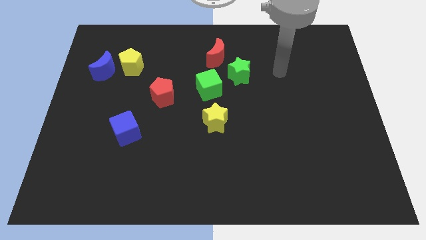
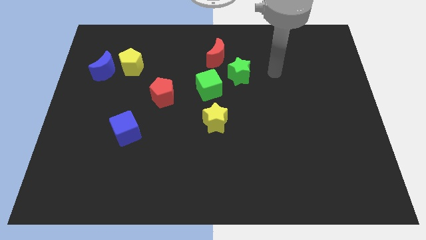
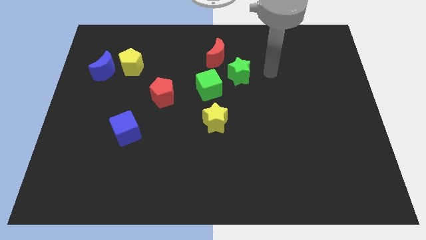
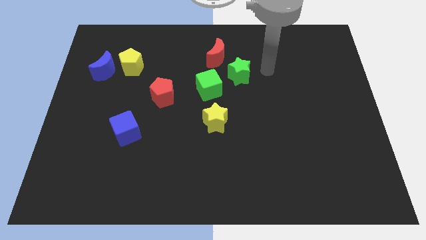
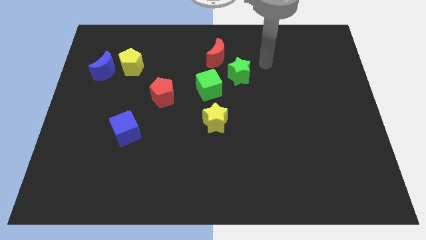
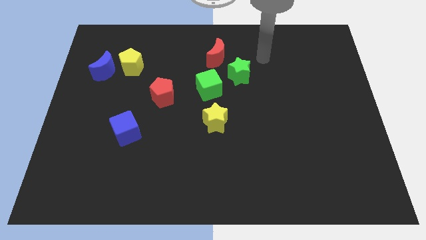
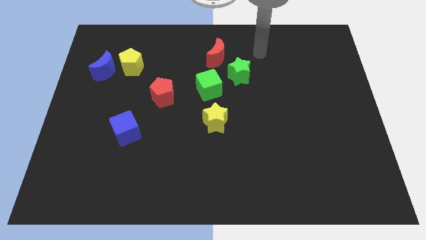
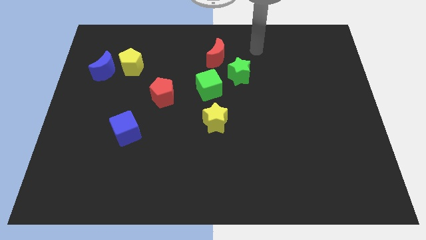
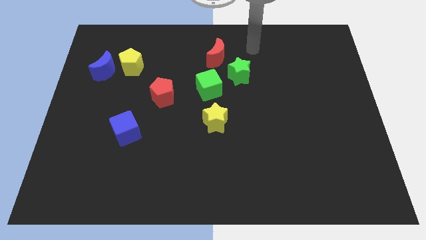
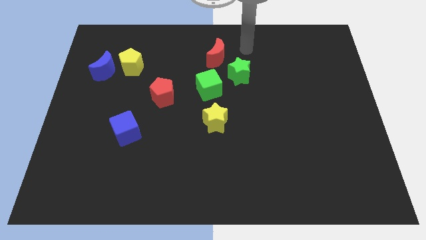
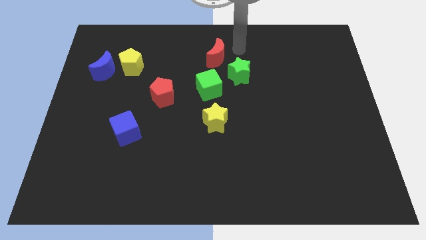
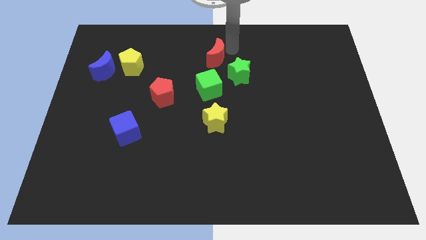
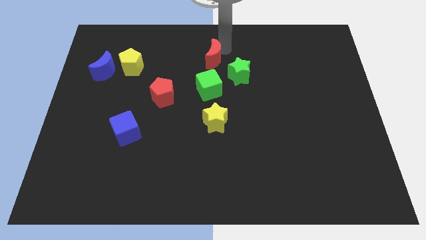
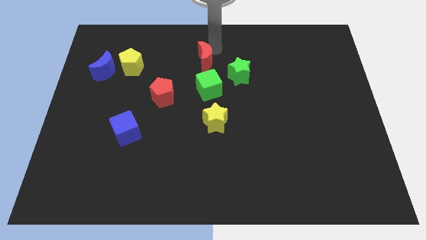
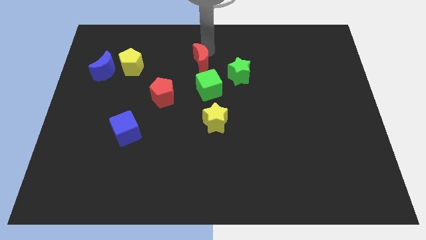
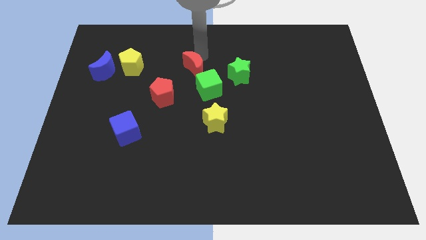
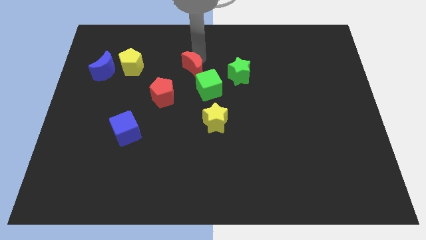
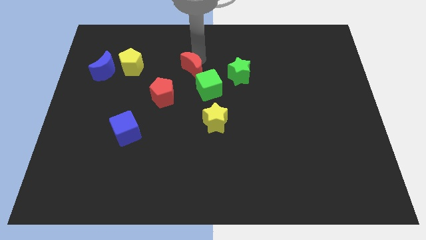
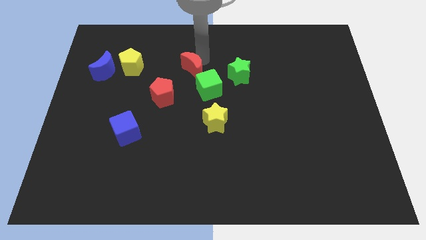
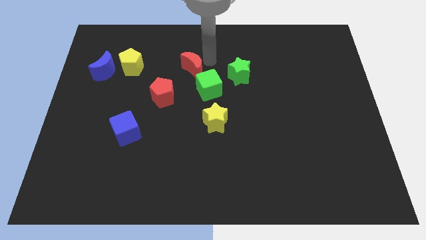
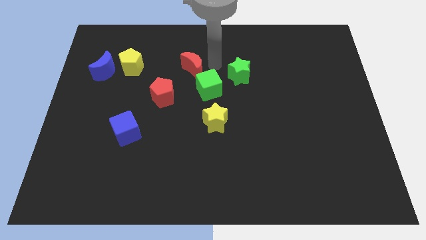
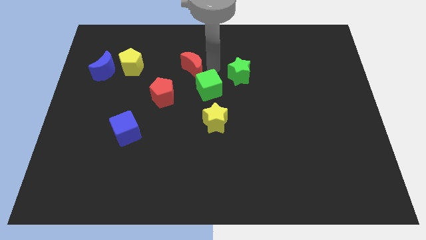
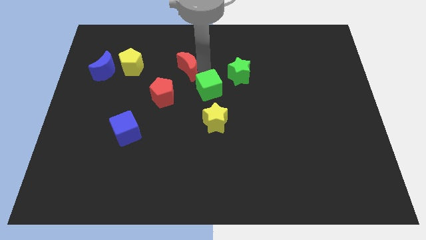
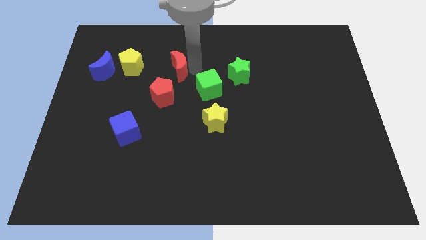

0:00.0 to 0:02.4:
move the red moon towards the top right of the red crescent

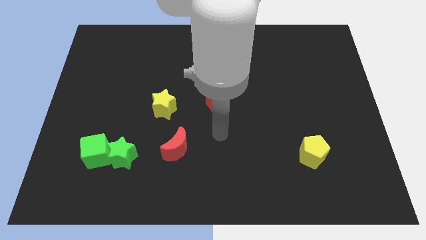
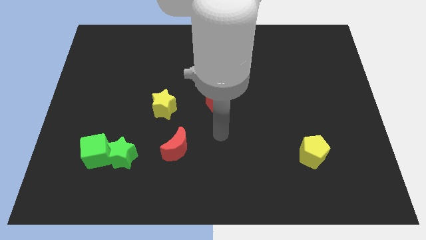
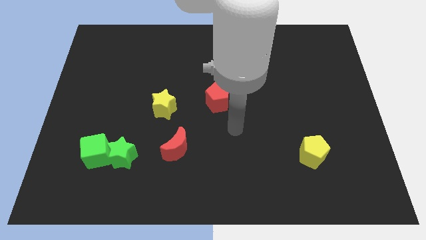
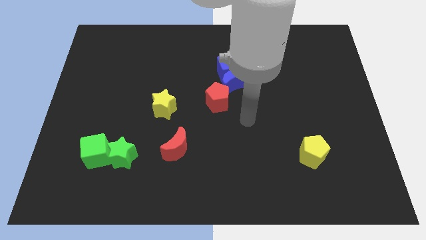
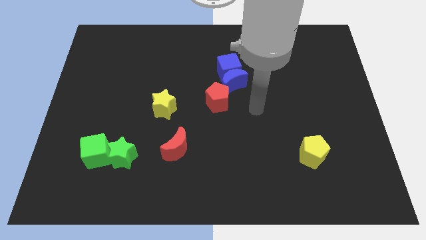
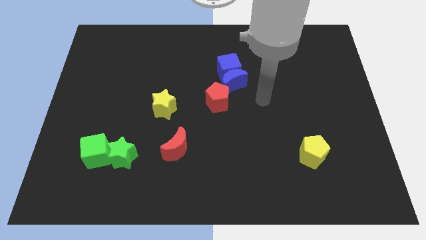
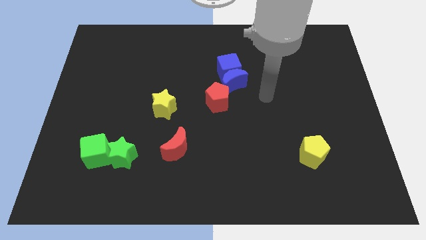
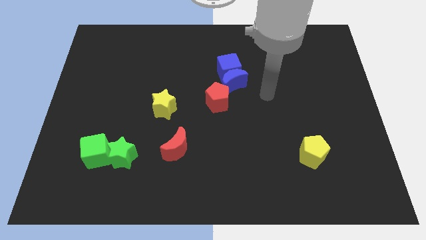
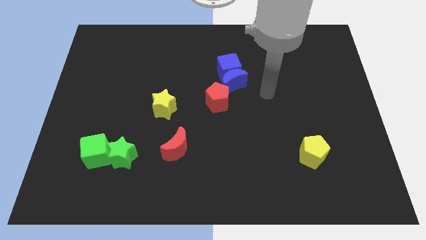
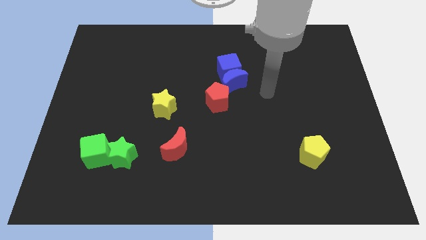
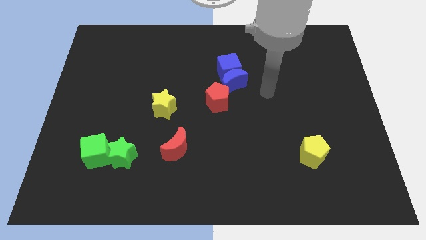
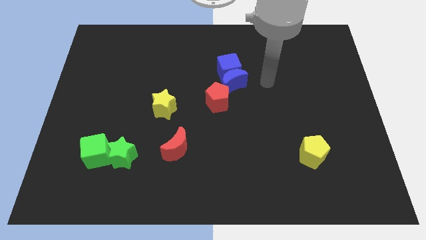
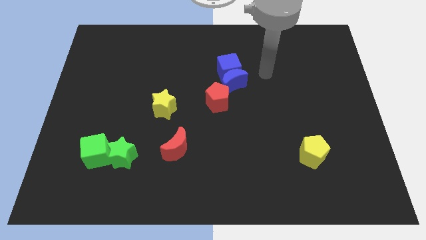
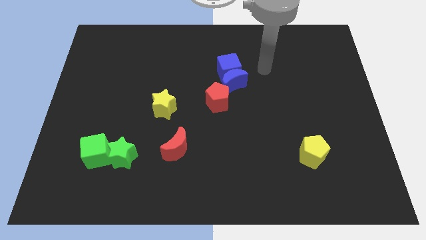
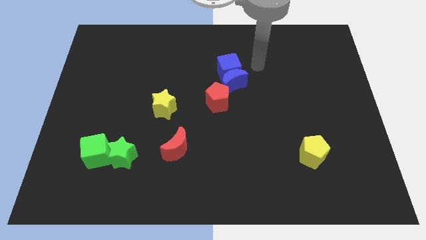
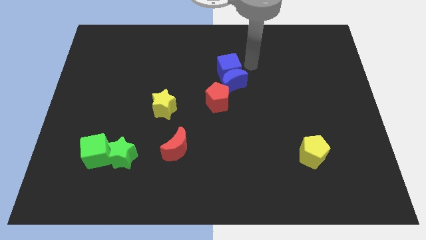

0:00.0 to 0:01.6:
place your arm at the right side of the blue cube

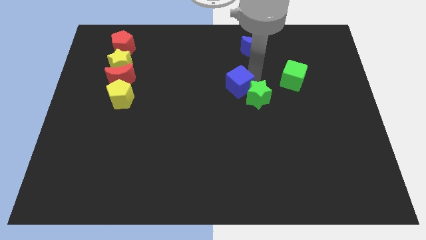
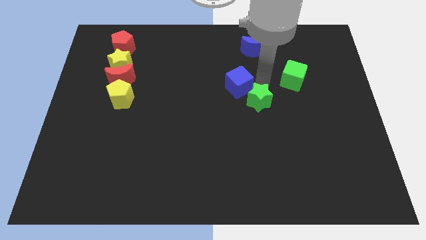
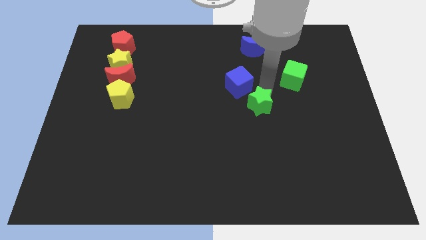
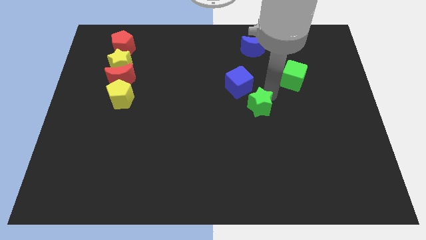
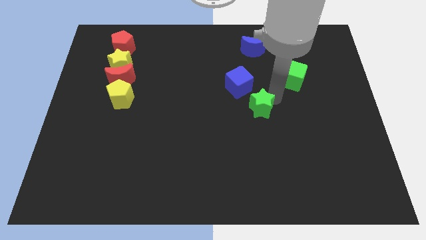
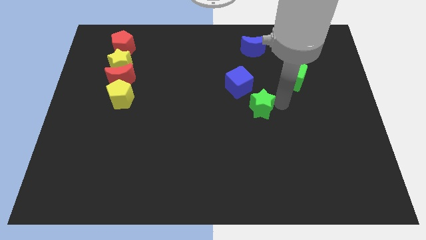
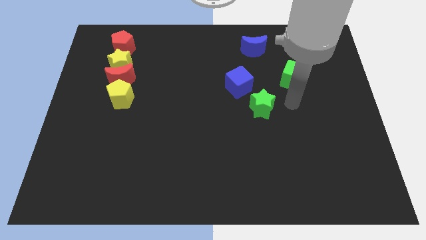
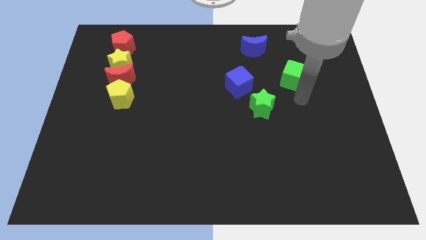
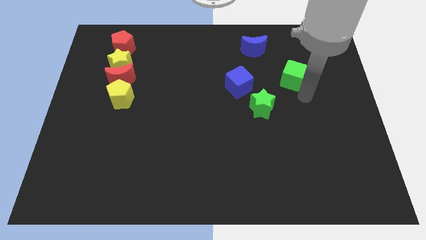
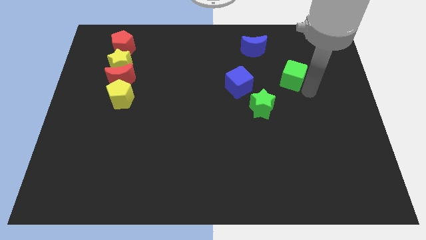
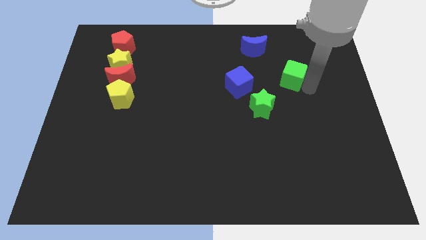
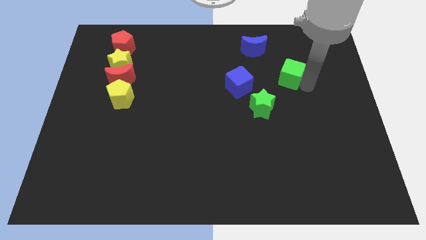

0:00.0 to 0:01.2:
separate the green star from the blue cube

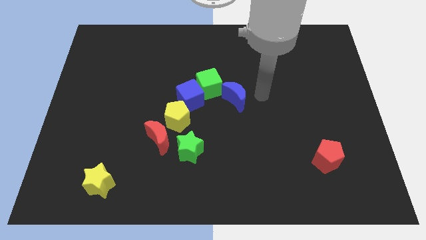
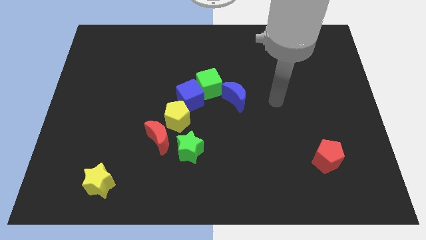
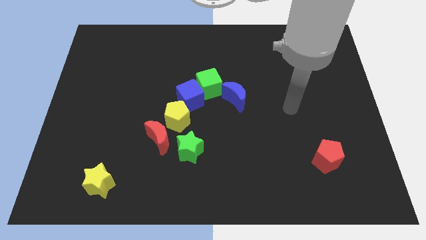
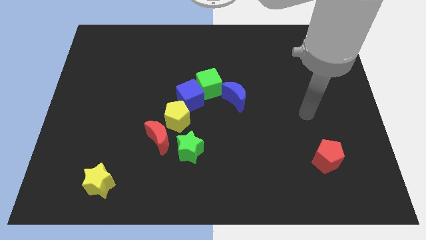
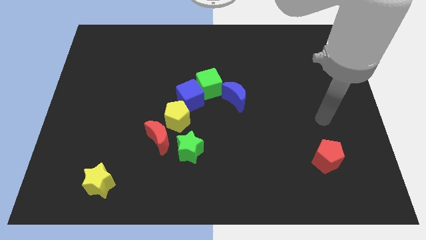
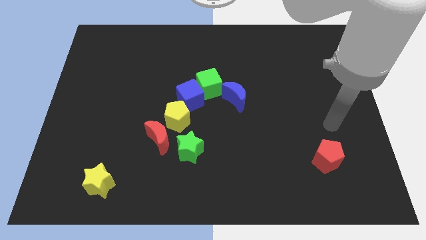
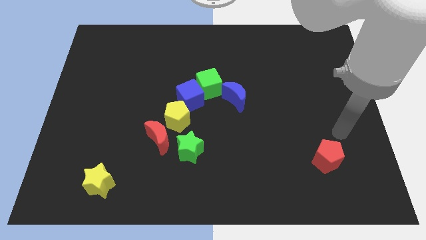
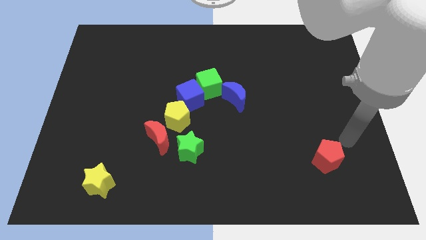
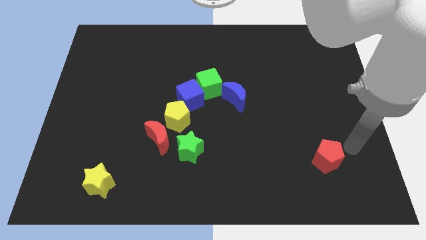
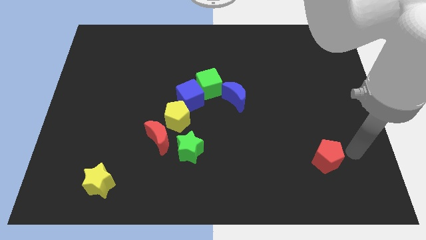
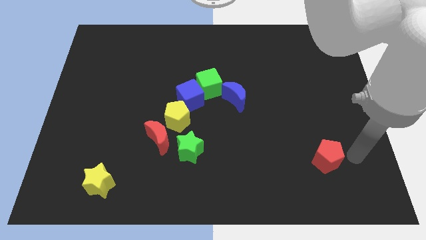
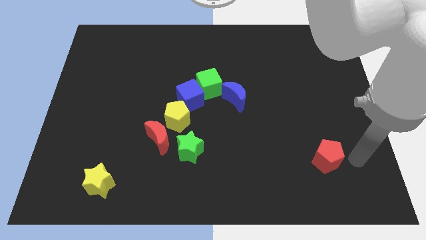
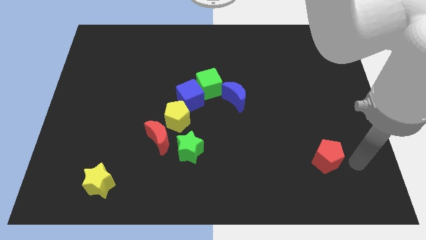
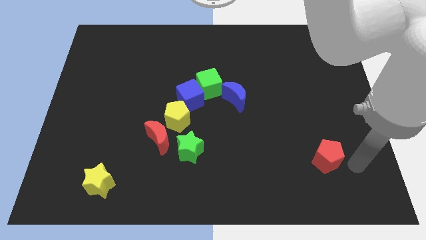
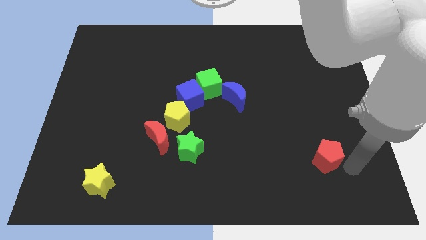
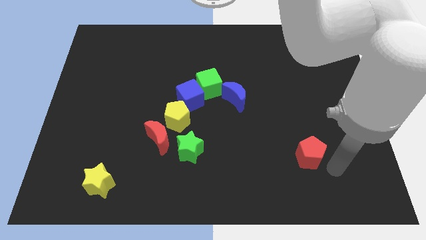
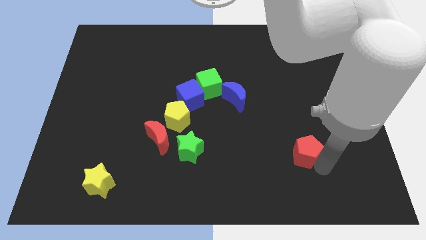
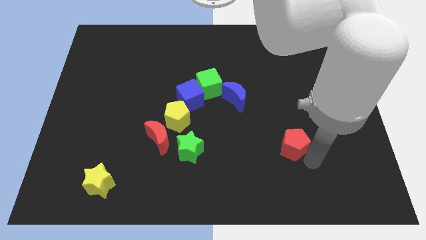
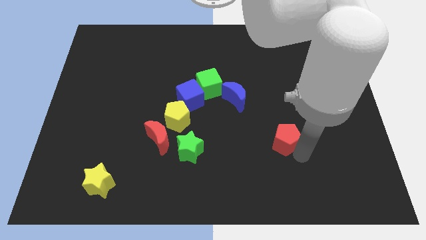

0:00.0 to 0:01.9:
move the red pentagon towards the group of blocks

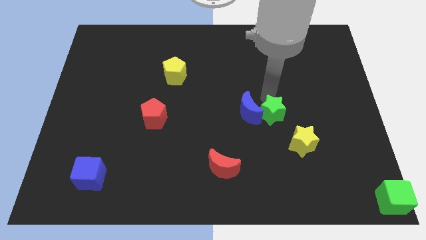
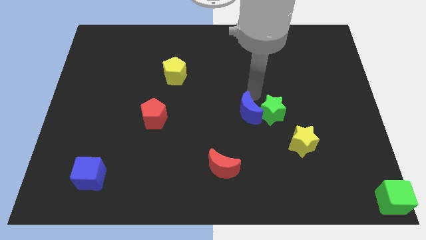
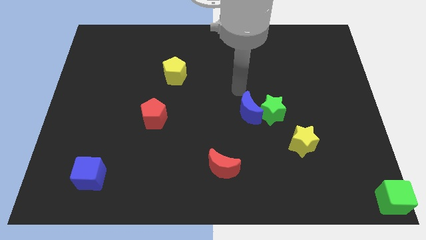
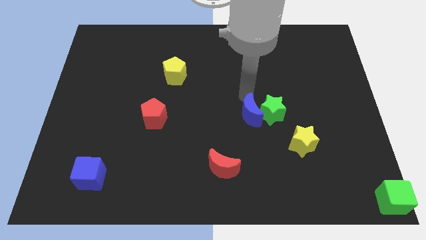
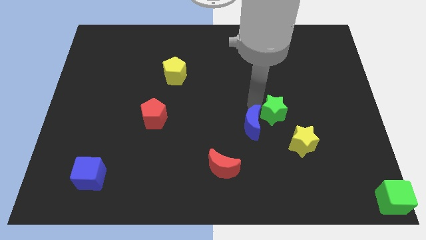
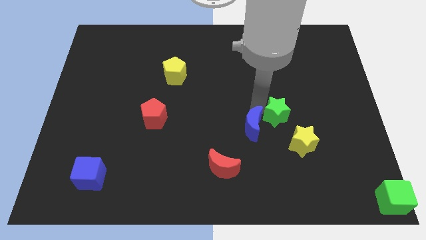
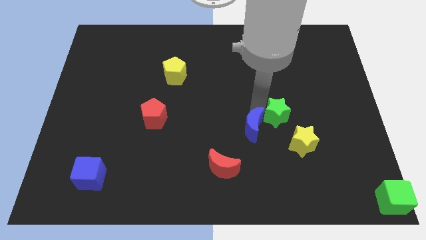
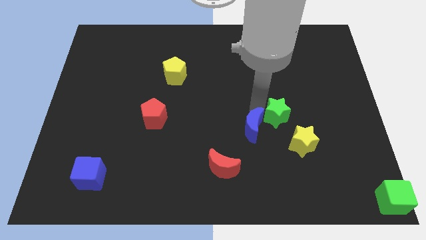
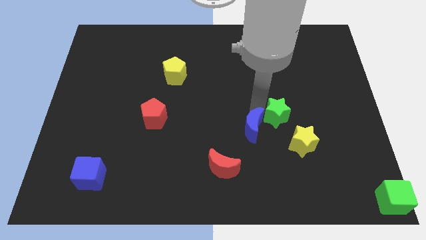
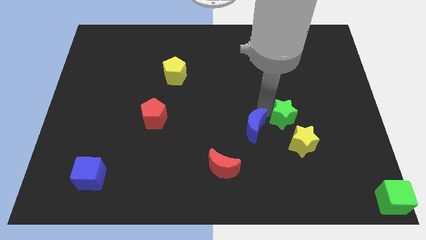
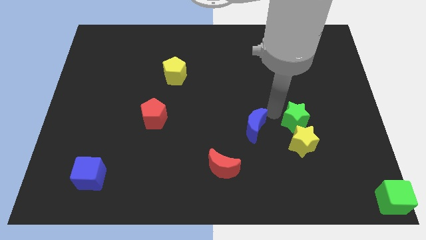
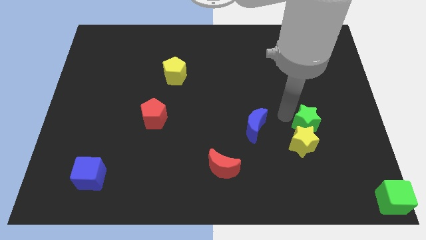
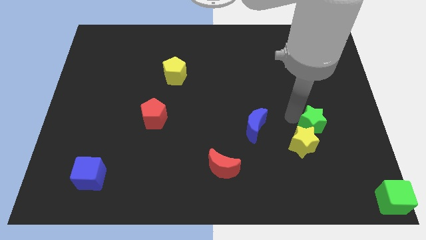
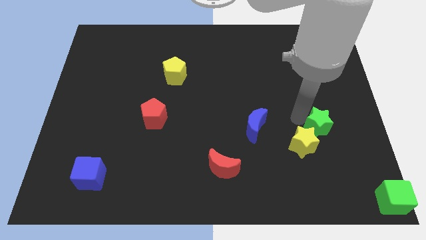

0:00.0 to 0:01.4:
separate the green star from the blue crescent

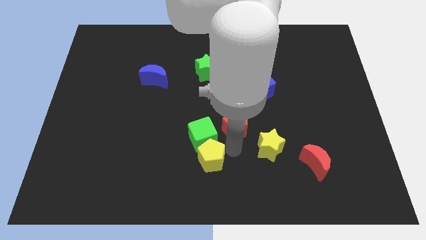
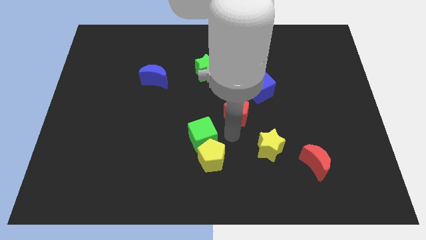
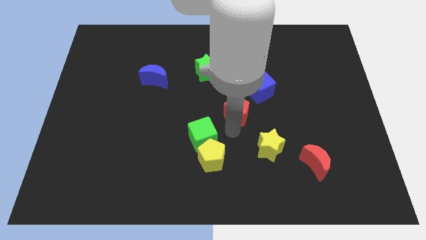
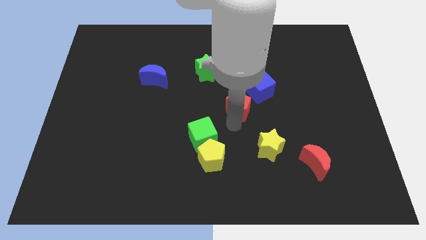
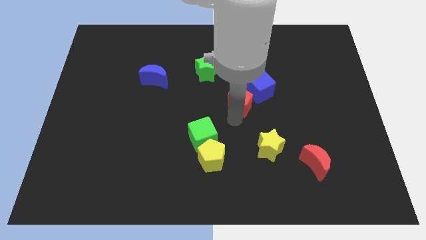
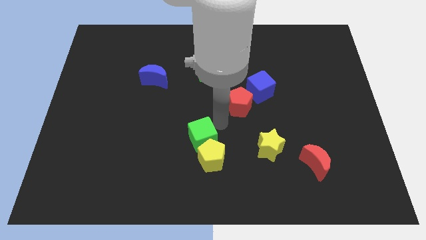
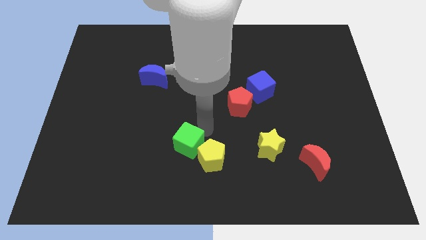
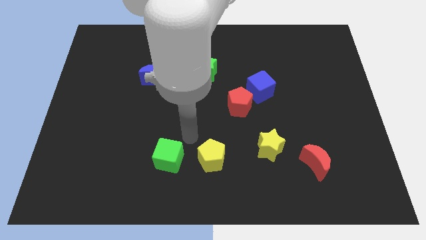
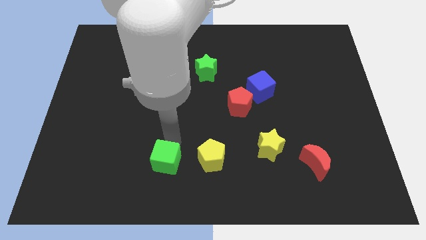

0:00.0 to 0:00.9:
move the red pentagon diagonally top right to yellow pentagon
